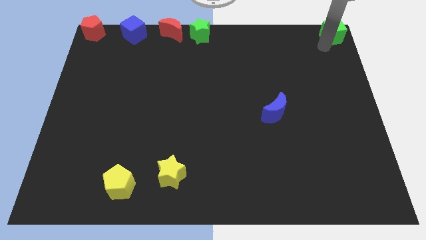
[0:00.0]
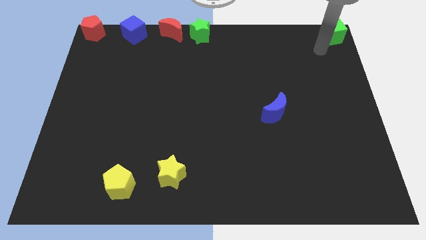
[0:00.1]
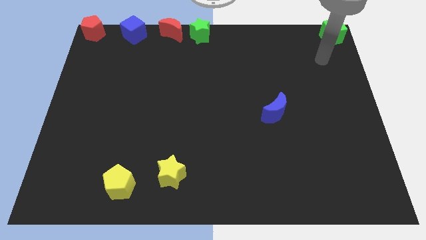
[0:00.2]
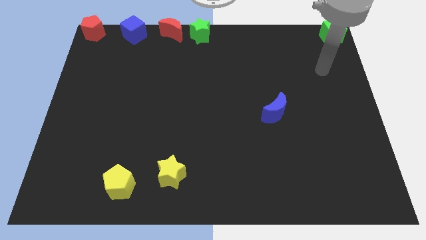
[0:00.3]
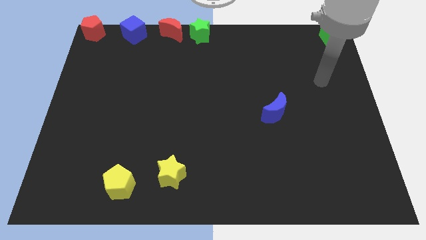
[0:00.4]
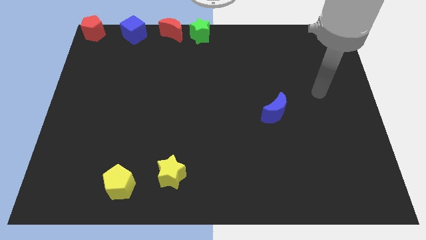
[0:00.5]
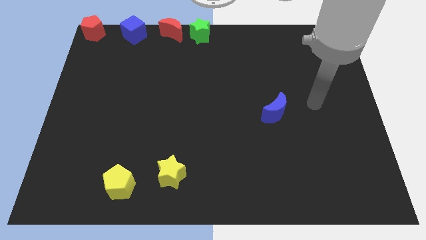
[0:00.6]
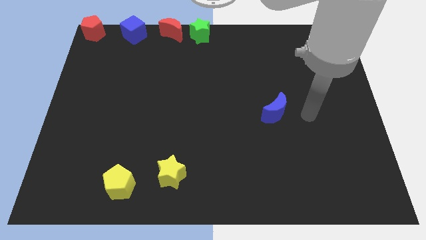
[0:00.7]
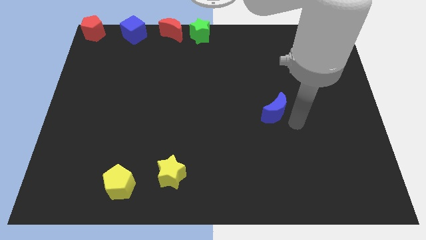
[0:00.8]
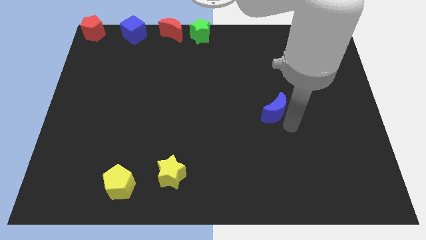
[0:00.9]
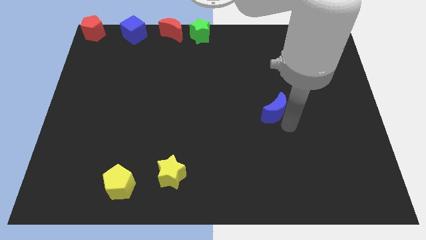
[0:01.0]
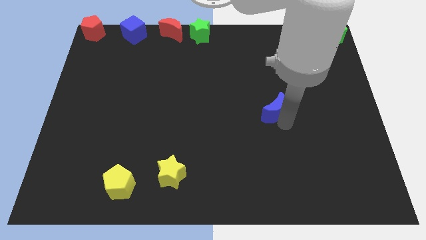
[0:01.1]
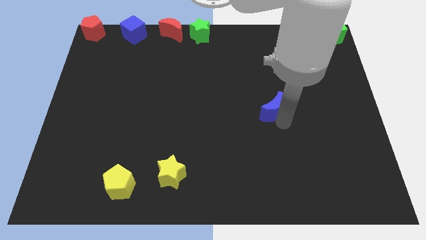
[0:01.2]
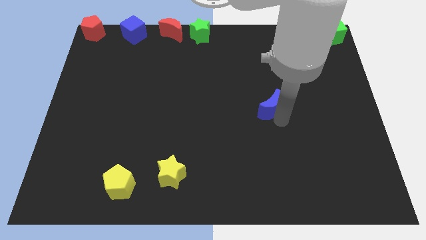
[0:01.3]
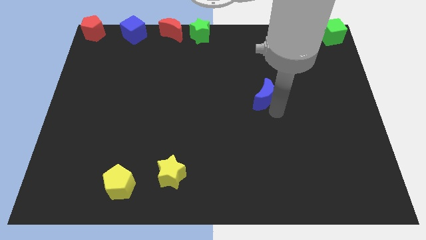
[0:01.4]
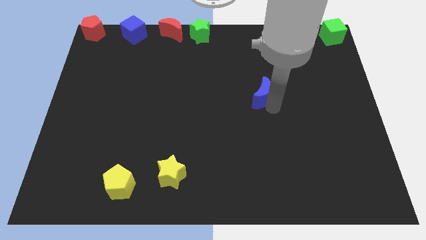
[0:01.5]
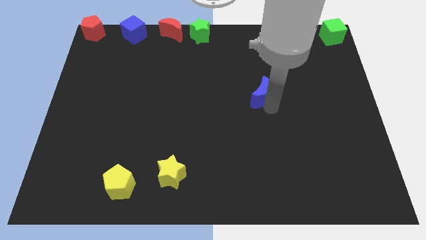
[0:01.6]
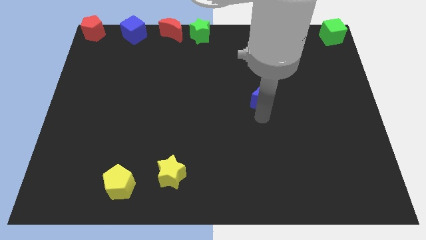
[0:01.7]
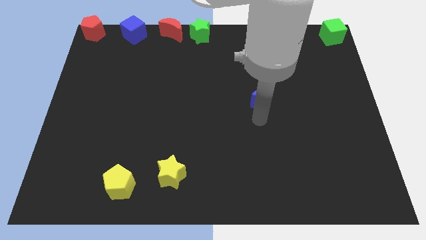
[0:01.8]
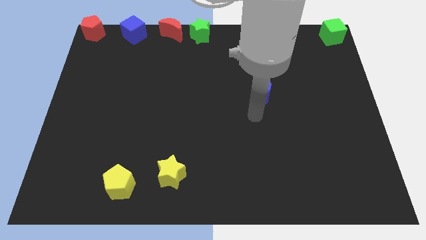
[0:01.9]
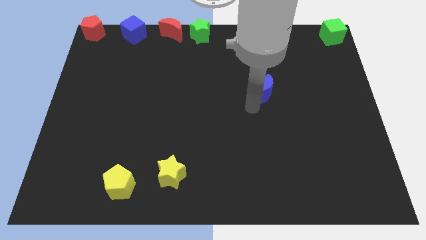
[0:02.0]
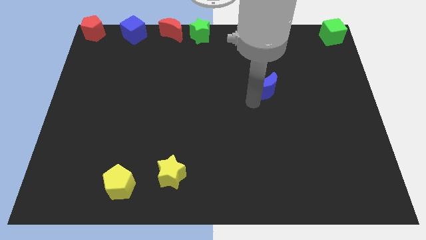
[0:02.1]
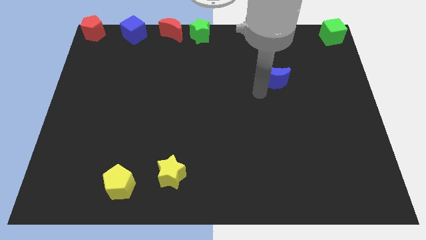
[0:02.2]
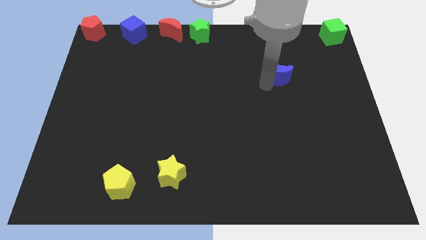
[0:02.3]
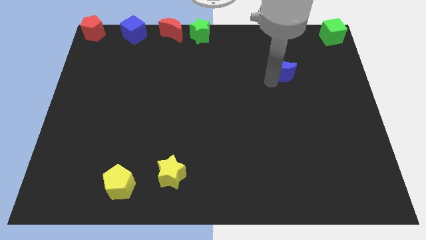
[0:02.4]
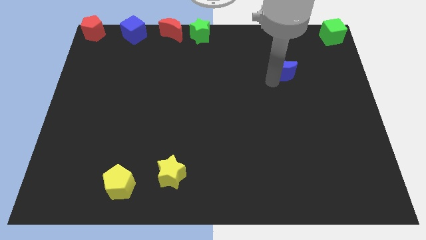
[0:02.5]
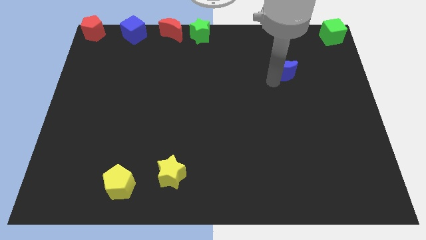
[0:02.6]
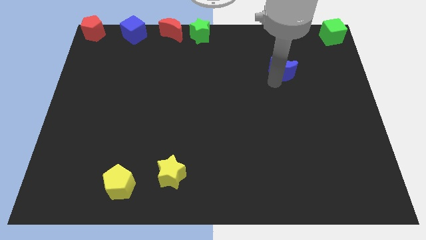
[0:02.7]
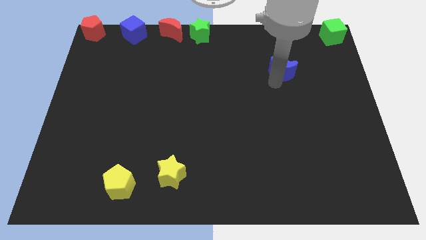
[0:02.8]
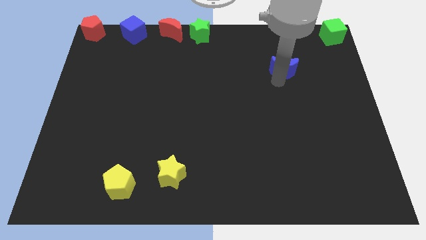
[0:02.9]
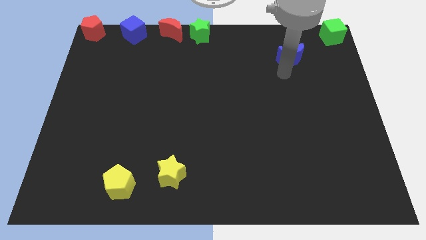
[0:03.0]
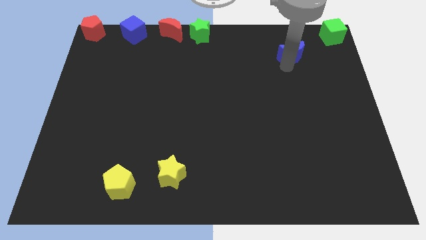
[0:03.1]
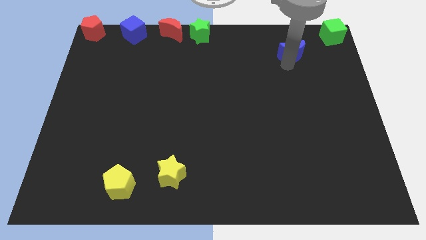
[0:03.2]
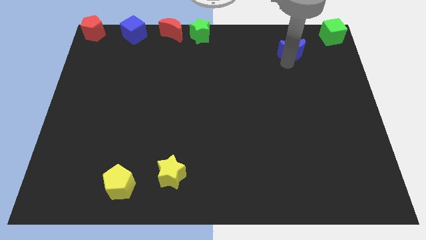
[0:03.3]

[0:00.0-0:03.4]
drag the blue crescent towards the green cube

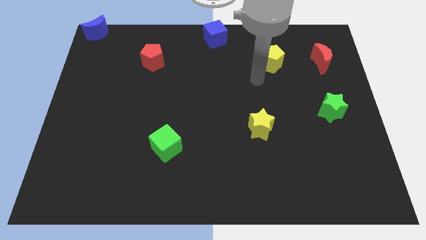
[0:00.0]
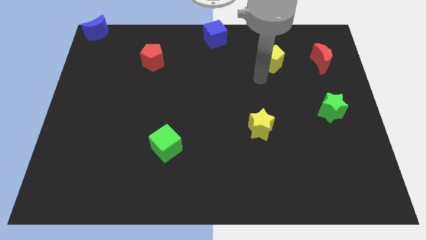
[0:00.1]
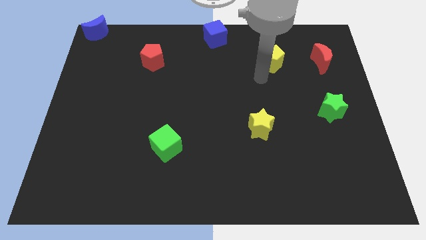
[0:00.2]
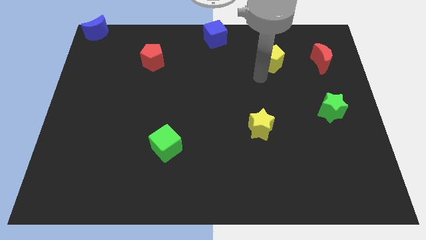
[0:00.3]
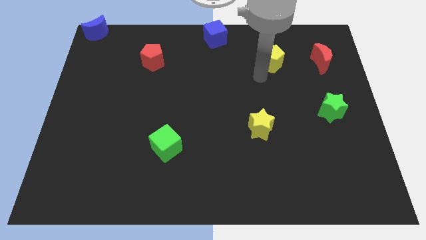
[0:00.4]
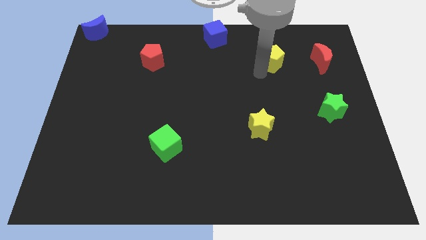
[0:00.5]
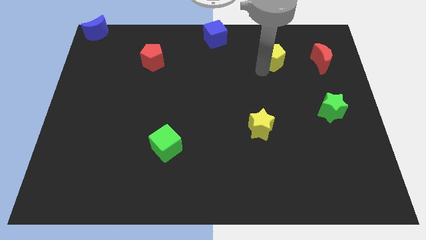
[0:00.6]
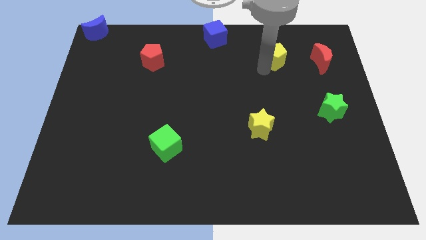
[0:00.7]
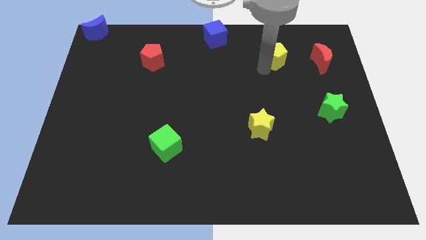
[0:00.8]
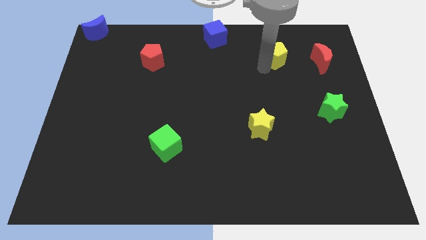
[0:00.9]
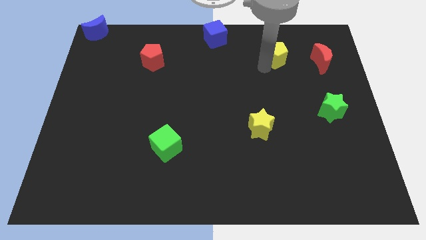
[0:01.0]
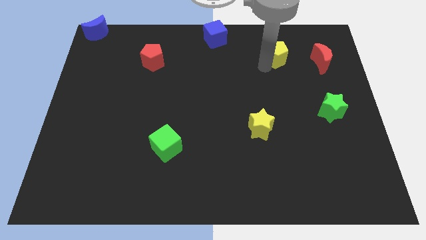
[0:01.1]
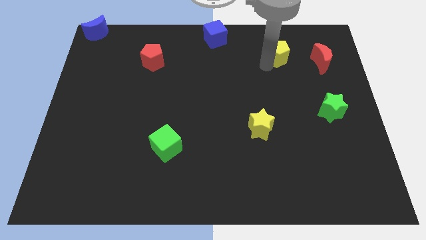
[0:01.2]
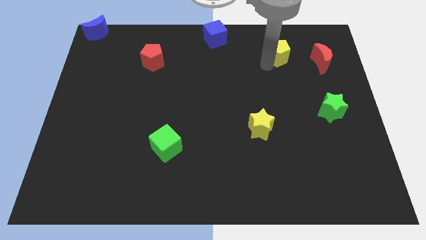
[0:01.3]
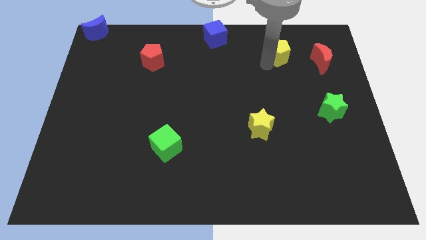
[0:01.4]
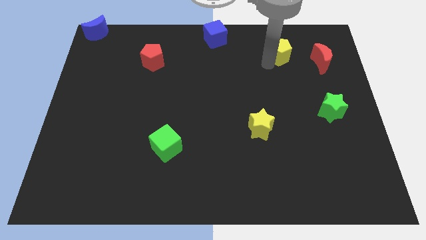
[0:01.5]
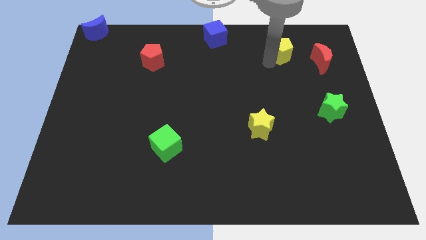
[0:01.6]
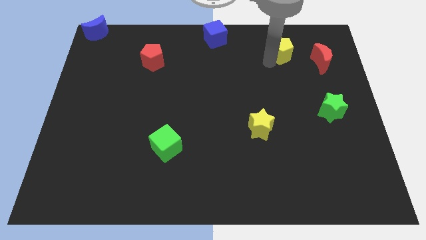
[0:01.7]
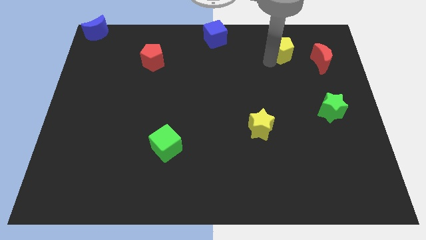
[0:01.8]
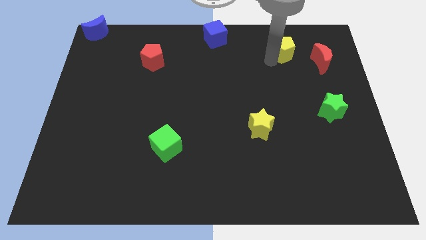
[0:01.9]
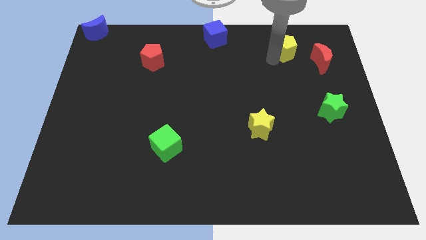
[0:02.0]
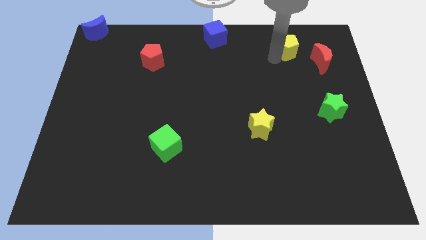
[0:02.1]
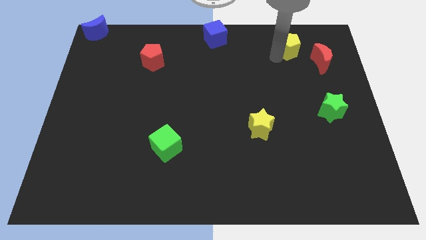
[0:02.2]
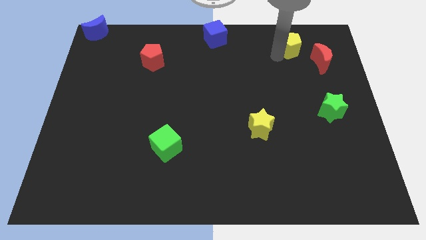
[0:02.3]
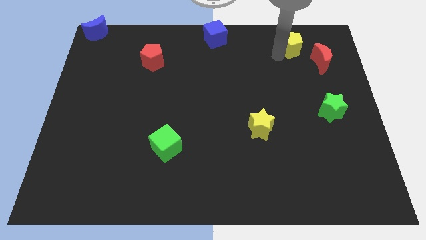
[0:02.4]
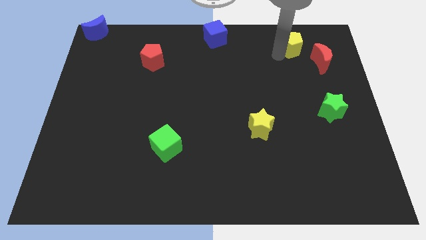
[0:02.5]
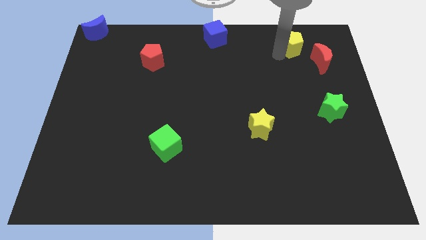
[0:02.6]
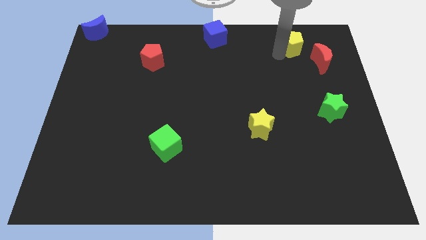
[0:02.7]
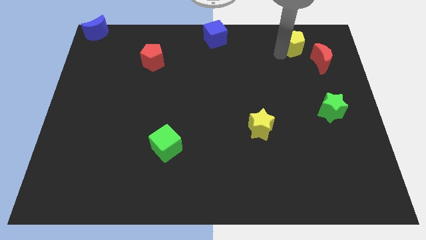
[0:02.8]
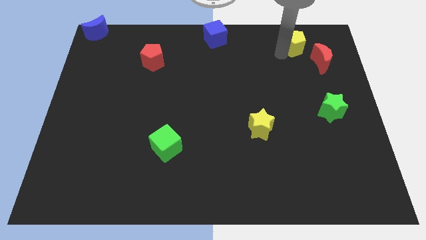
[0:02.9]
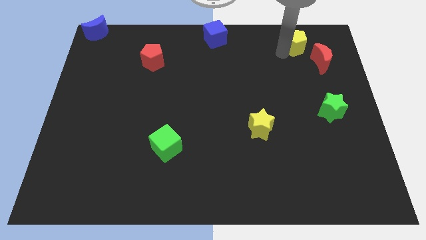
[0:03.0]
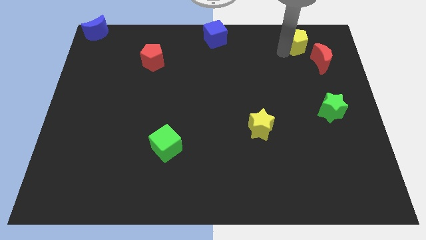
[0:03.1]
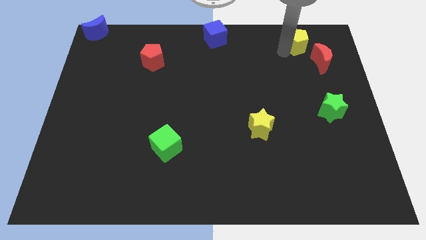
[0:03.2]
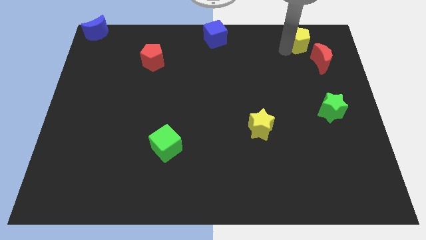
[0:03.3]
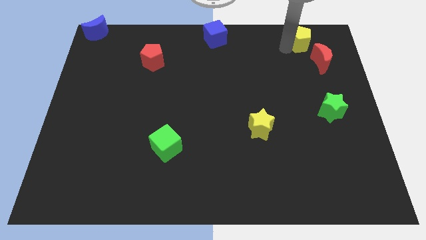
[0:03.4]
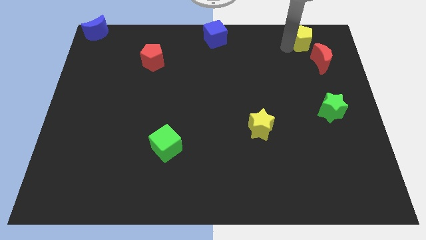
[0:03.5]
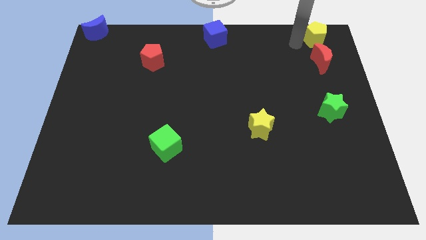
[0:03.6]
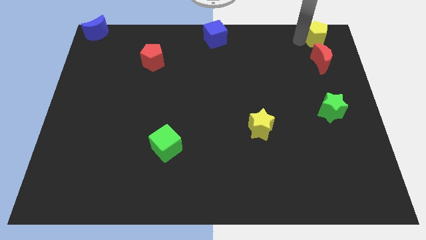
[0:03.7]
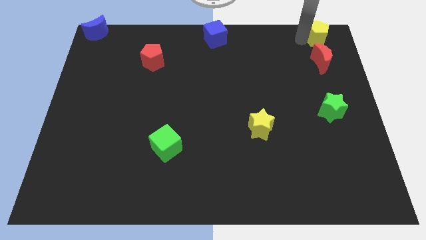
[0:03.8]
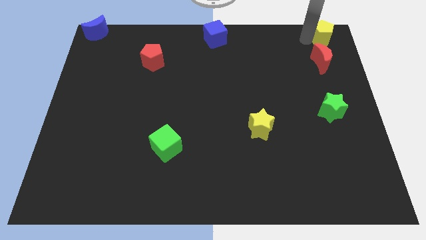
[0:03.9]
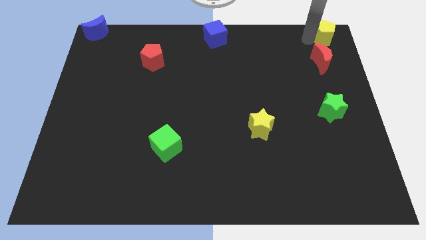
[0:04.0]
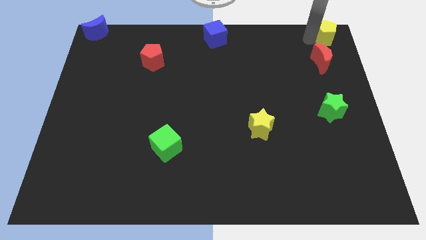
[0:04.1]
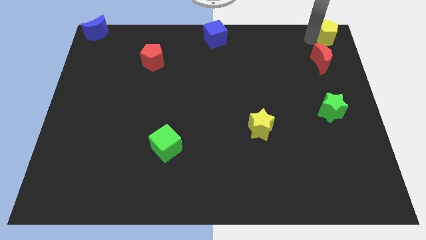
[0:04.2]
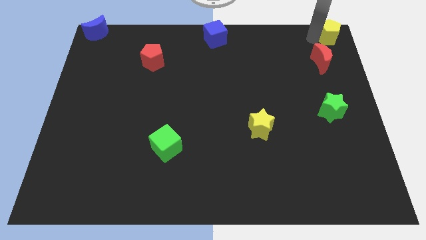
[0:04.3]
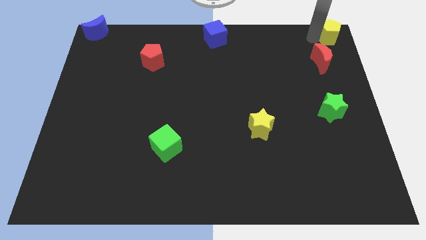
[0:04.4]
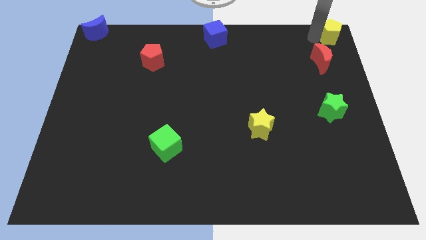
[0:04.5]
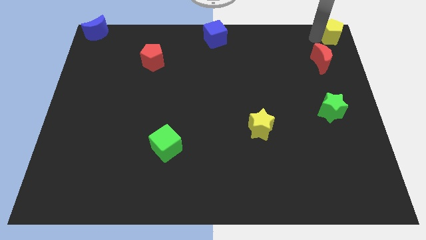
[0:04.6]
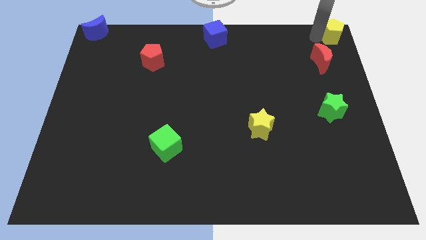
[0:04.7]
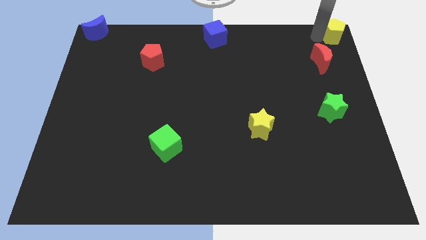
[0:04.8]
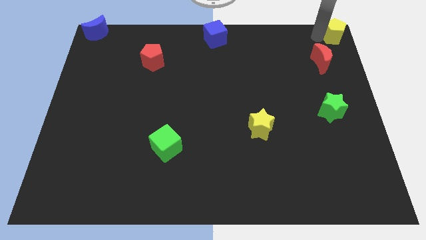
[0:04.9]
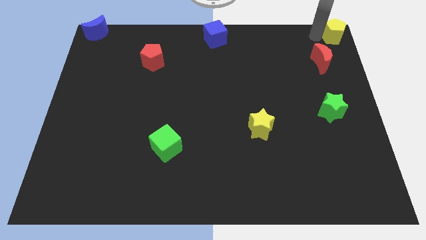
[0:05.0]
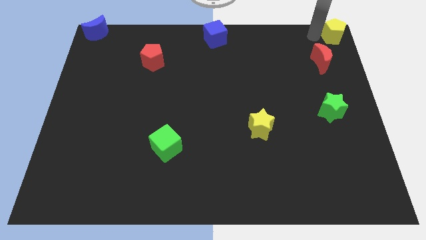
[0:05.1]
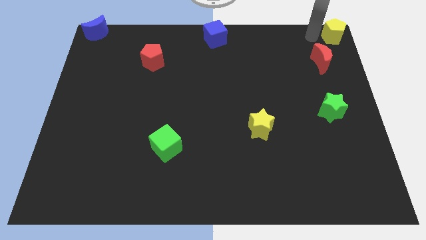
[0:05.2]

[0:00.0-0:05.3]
place the yellow pentagon diagonally to the top right side of the red moon

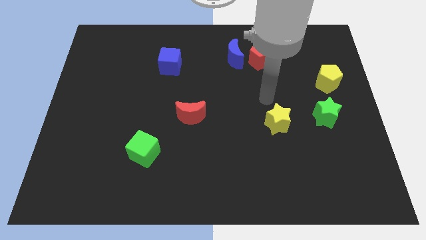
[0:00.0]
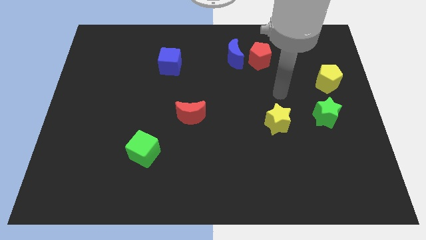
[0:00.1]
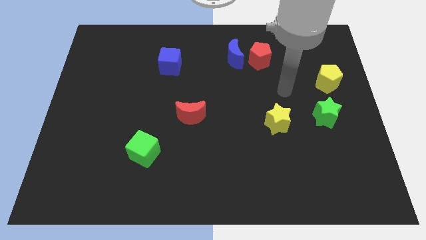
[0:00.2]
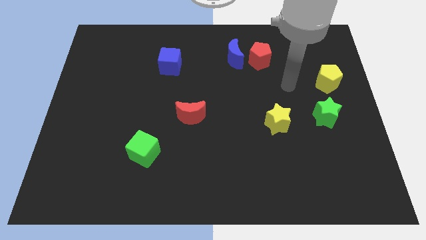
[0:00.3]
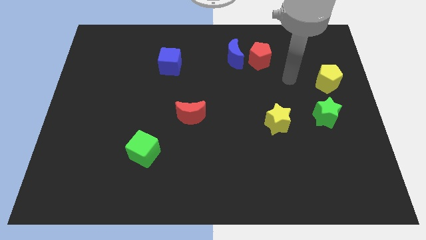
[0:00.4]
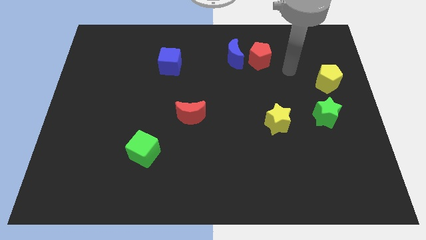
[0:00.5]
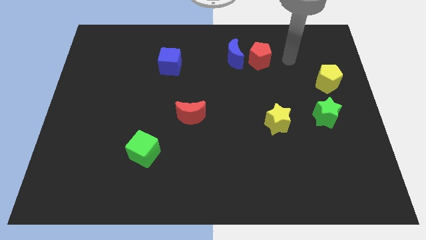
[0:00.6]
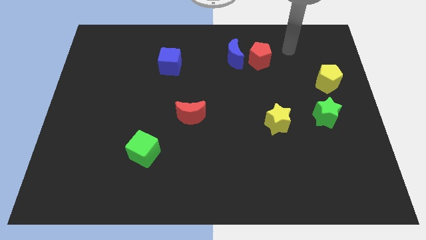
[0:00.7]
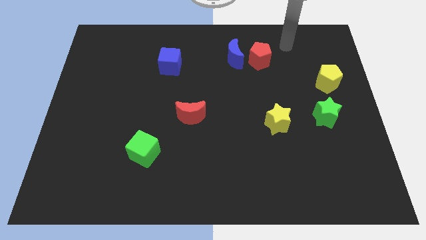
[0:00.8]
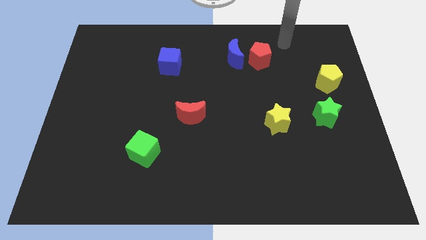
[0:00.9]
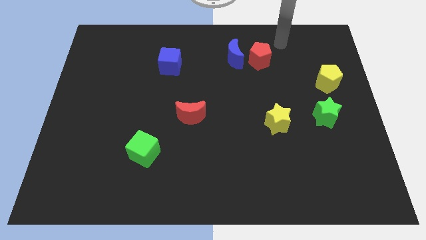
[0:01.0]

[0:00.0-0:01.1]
move your arm towards the top side of the board
